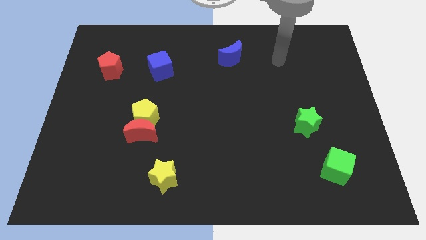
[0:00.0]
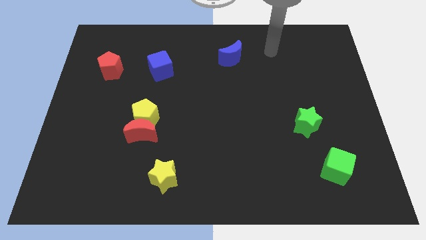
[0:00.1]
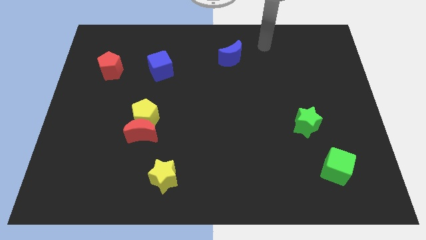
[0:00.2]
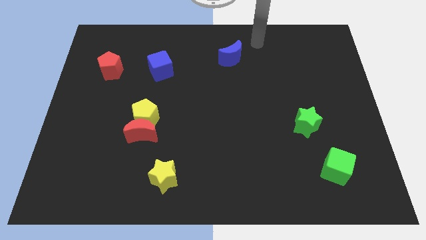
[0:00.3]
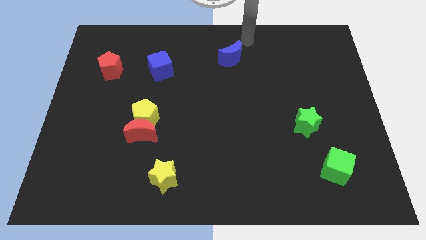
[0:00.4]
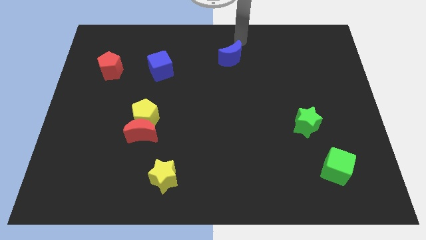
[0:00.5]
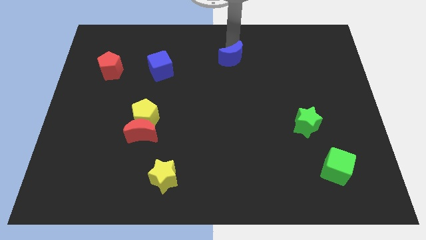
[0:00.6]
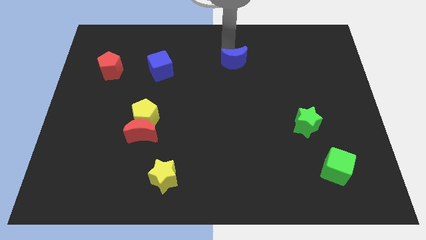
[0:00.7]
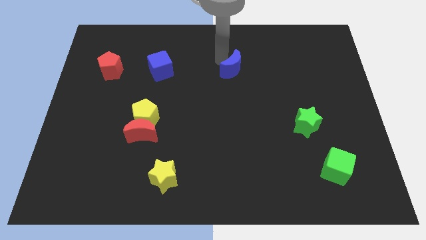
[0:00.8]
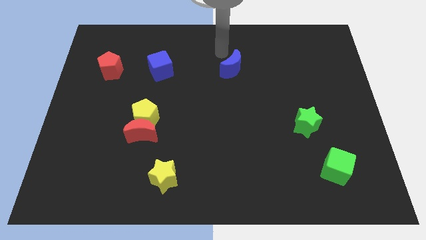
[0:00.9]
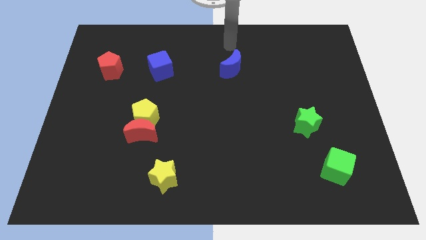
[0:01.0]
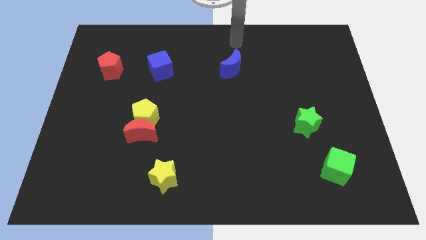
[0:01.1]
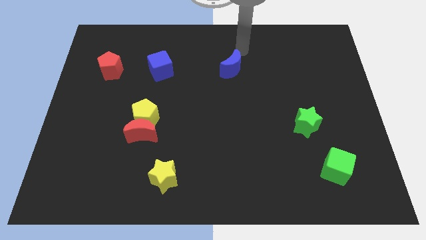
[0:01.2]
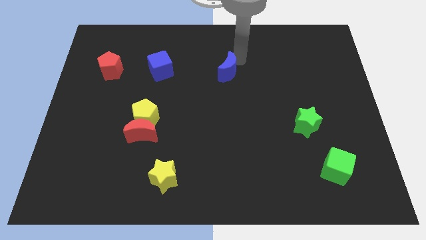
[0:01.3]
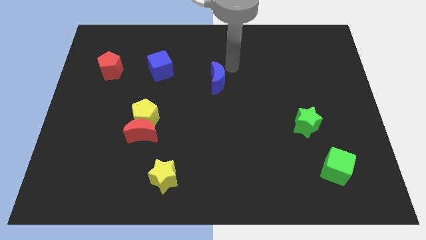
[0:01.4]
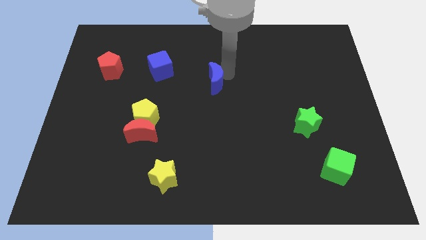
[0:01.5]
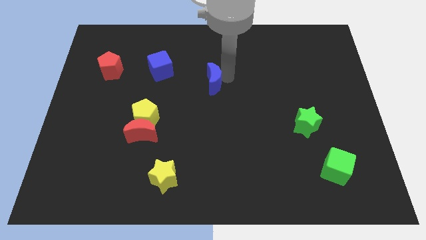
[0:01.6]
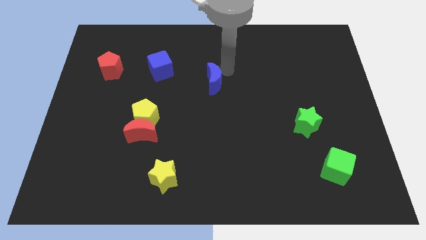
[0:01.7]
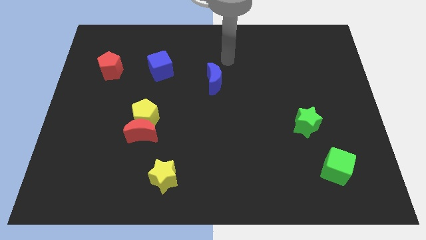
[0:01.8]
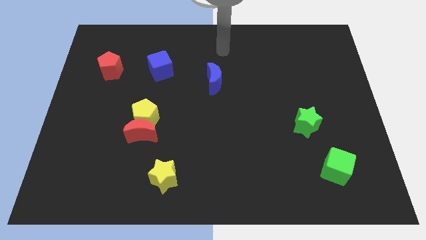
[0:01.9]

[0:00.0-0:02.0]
place the blue crescent towards center

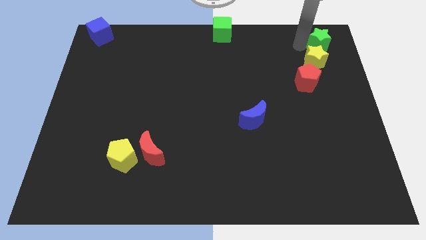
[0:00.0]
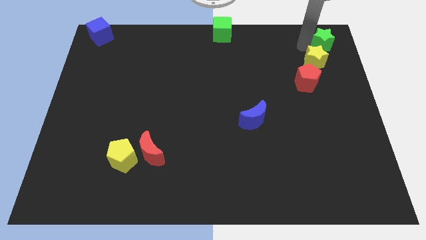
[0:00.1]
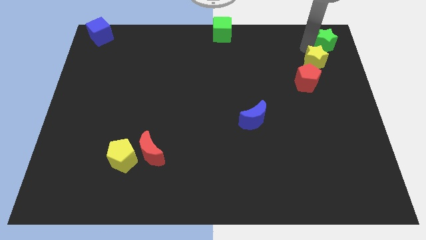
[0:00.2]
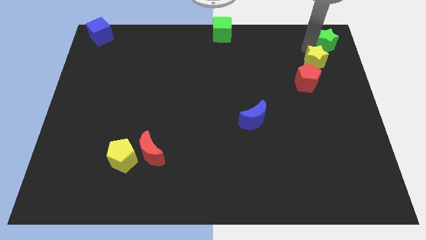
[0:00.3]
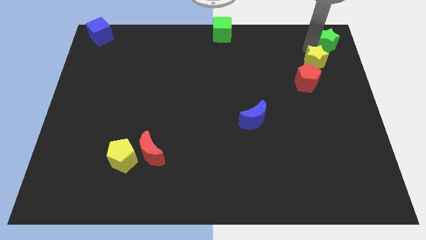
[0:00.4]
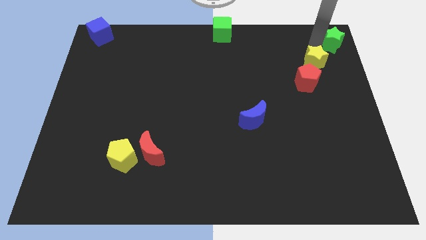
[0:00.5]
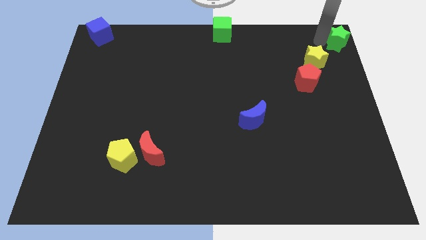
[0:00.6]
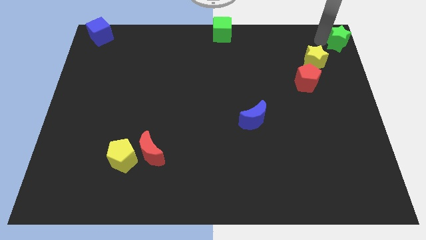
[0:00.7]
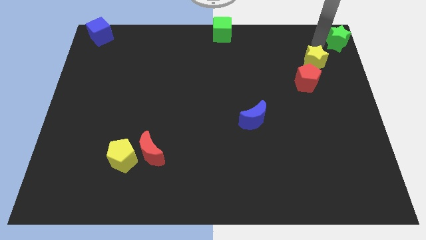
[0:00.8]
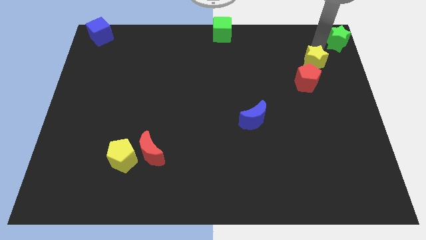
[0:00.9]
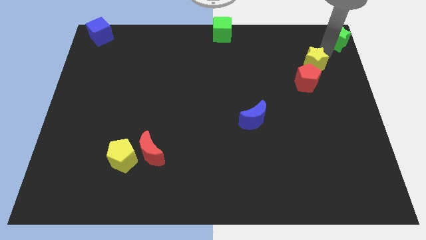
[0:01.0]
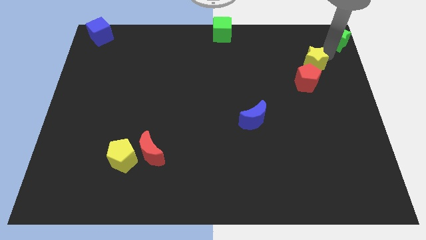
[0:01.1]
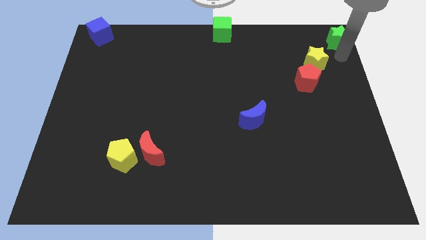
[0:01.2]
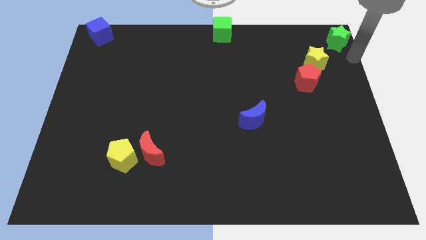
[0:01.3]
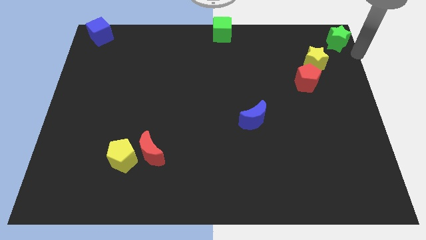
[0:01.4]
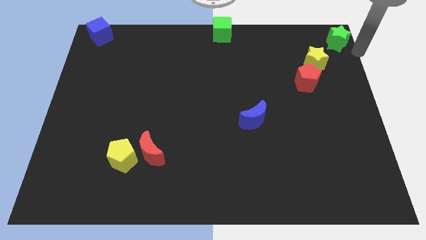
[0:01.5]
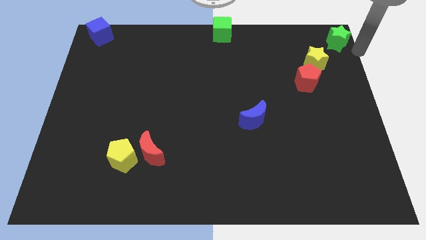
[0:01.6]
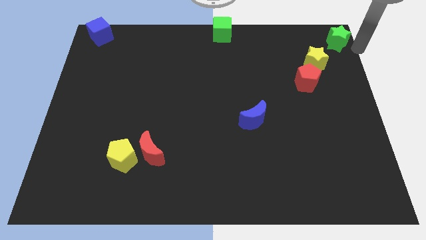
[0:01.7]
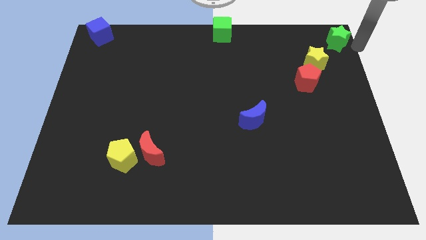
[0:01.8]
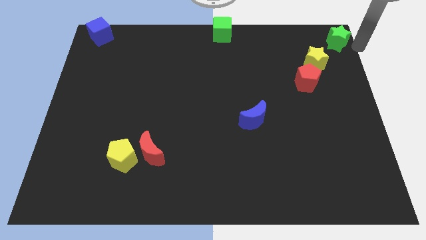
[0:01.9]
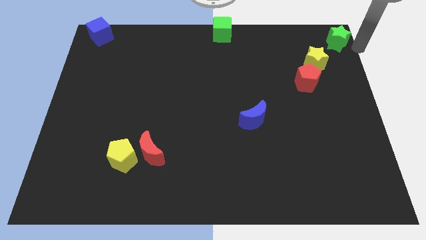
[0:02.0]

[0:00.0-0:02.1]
move green star towards top right

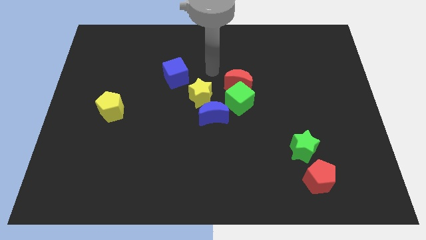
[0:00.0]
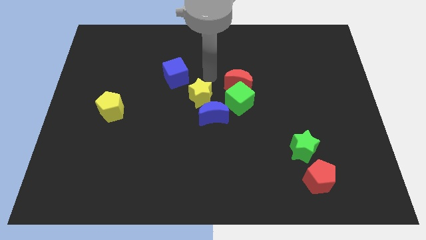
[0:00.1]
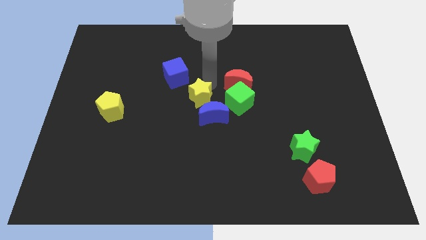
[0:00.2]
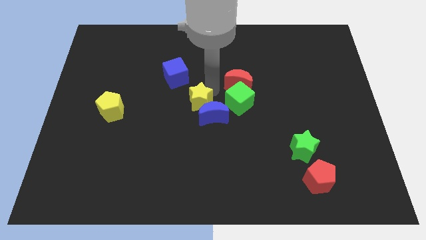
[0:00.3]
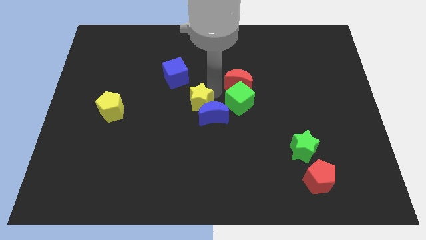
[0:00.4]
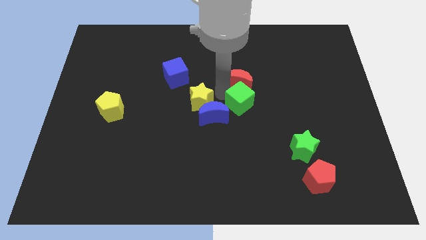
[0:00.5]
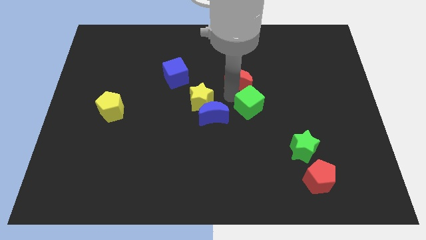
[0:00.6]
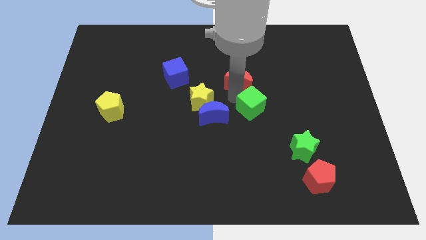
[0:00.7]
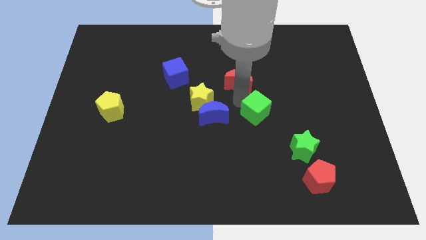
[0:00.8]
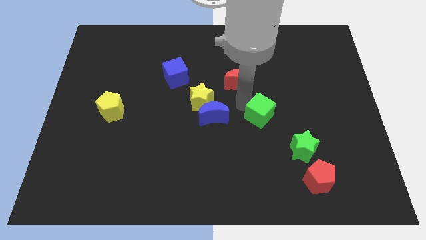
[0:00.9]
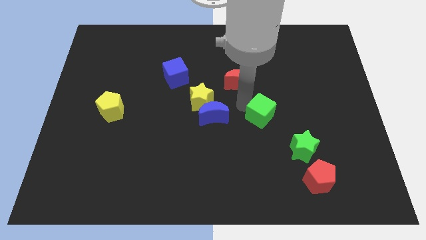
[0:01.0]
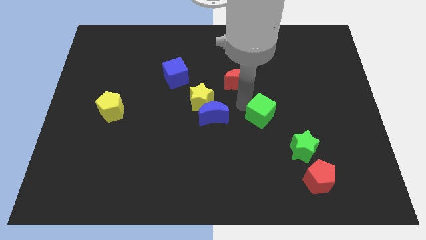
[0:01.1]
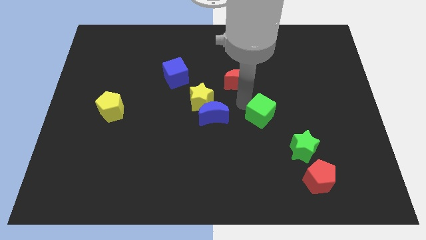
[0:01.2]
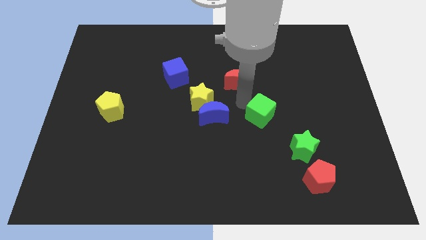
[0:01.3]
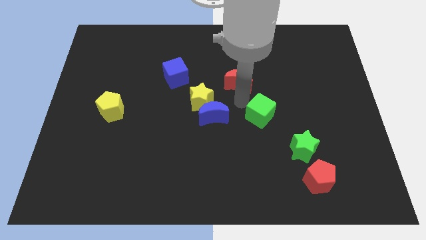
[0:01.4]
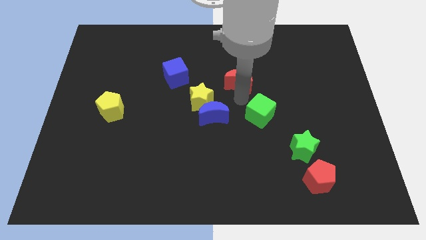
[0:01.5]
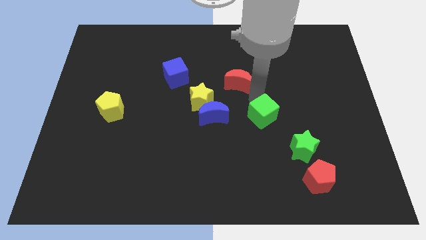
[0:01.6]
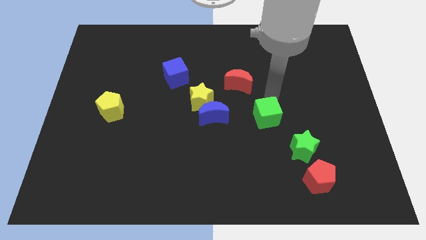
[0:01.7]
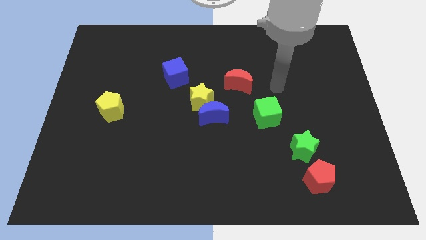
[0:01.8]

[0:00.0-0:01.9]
move the green cube towards the green star

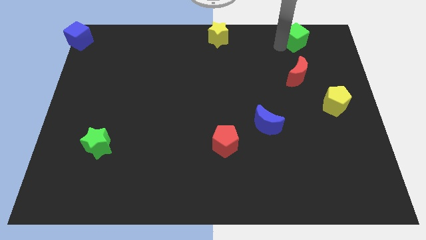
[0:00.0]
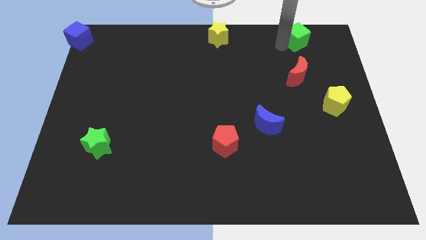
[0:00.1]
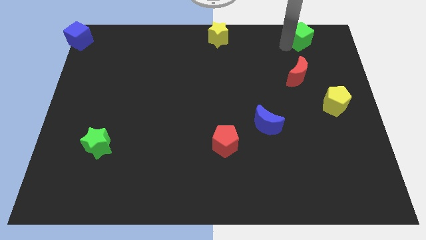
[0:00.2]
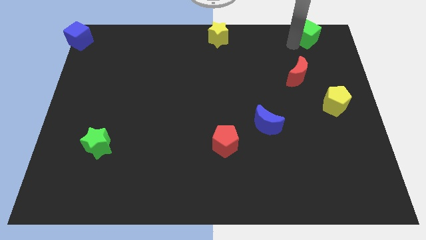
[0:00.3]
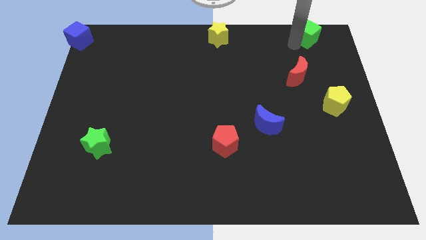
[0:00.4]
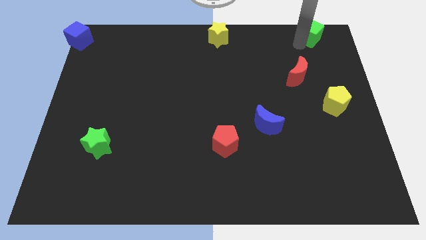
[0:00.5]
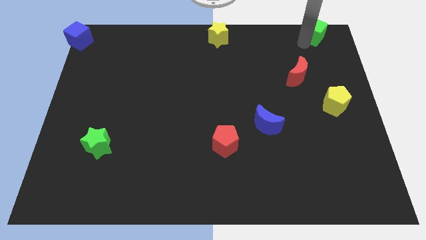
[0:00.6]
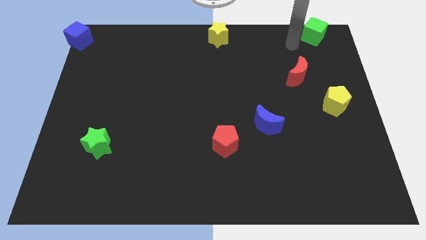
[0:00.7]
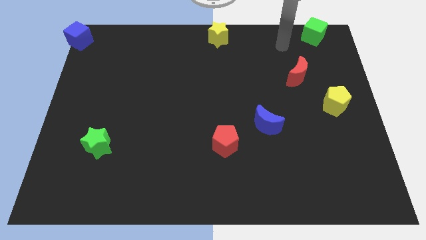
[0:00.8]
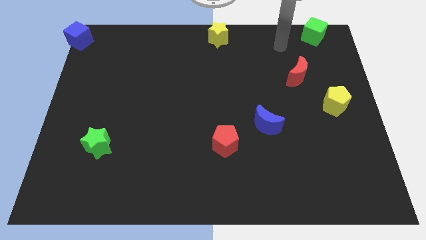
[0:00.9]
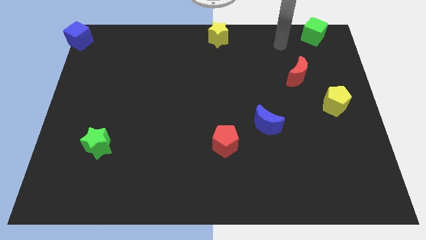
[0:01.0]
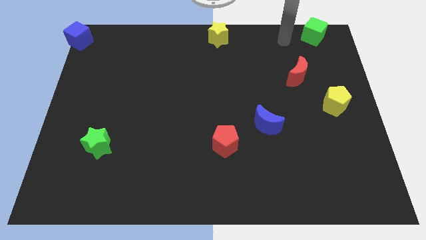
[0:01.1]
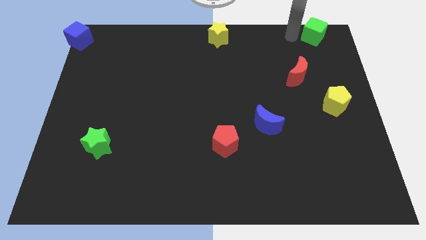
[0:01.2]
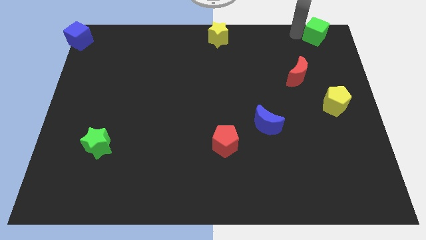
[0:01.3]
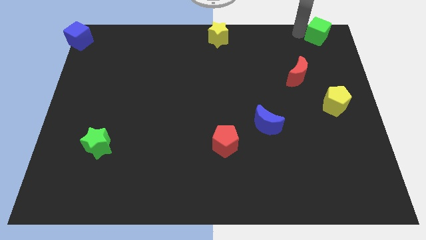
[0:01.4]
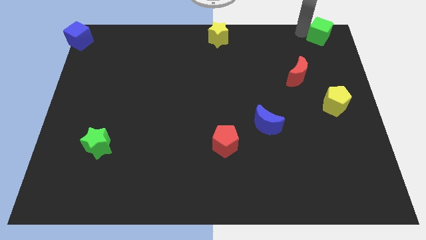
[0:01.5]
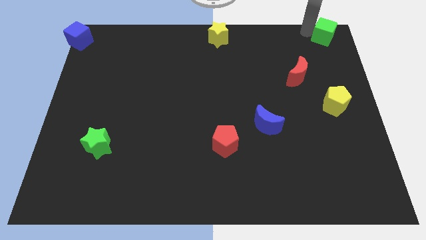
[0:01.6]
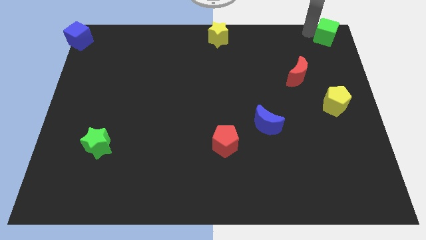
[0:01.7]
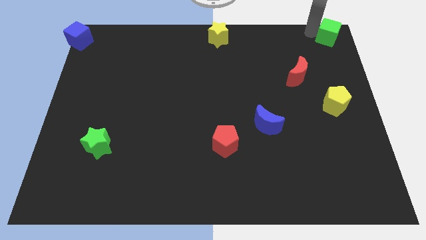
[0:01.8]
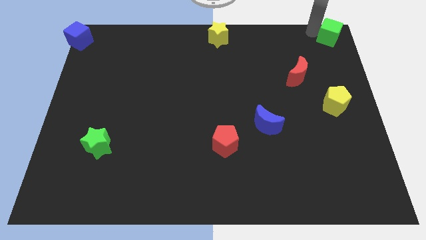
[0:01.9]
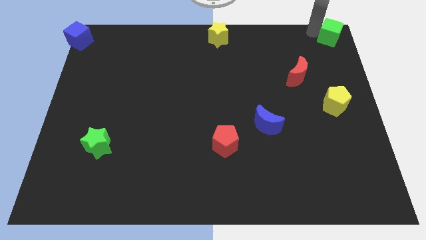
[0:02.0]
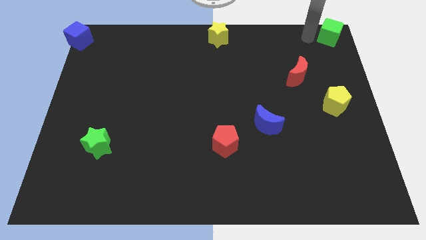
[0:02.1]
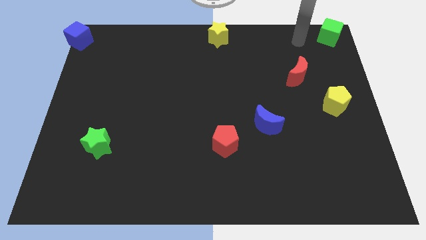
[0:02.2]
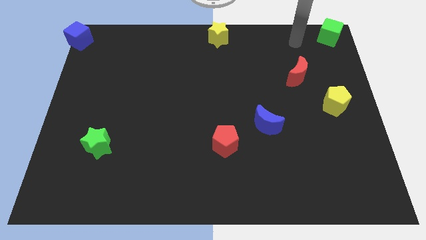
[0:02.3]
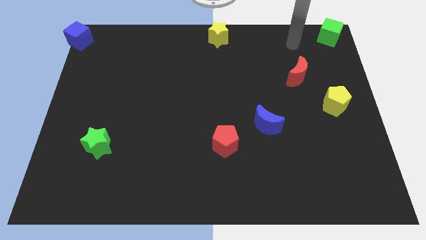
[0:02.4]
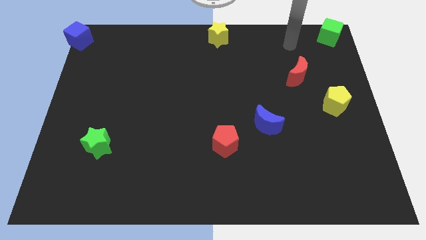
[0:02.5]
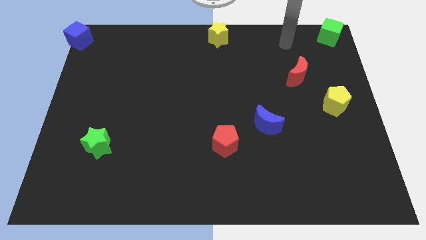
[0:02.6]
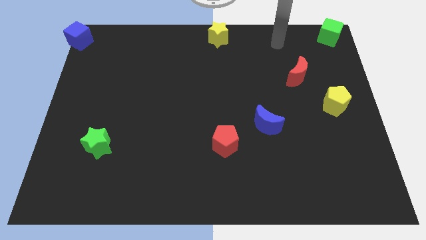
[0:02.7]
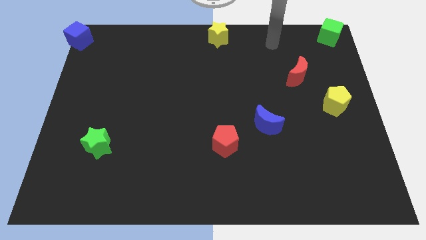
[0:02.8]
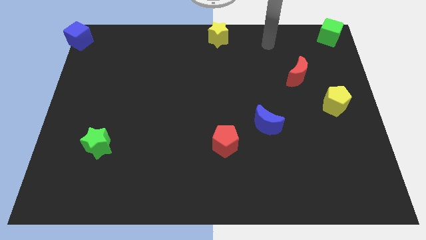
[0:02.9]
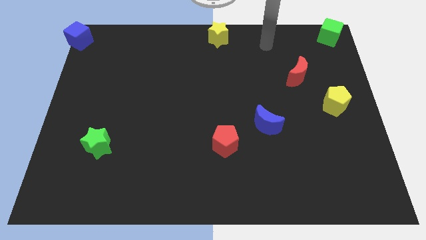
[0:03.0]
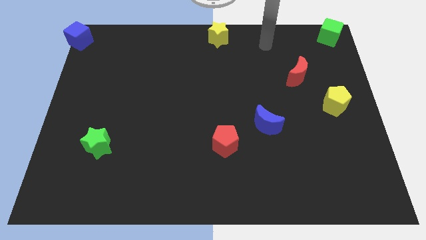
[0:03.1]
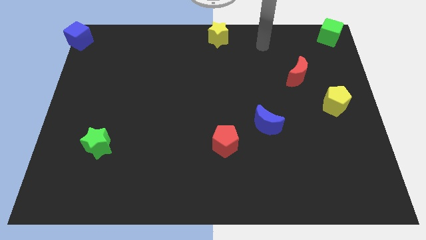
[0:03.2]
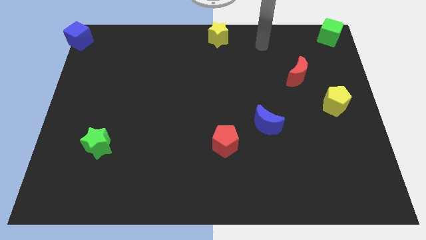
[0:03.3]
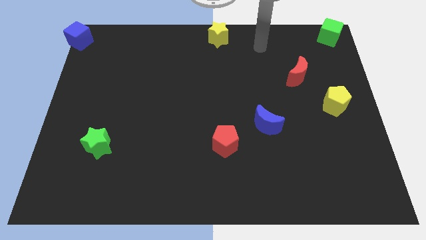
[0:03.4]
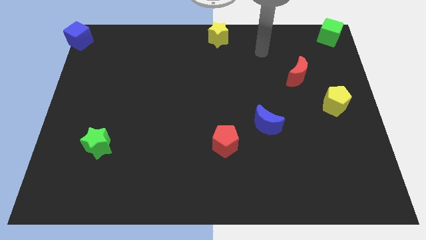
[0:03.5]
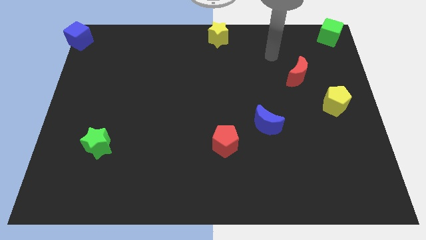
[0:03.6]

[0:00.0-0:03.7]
slide the green cube to the top right corner
